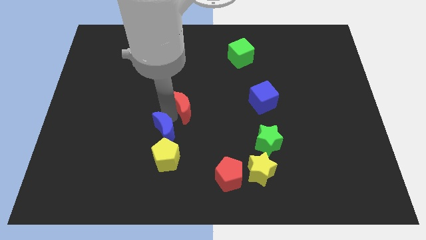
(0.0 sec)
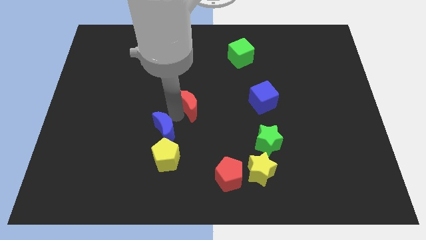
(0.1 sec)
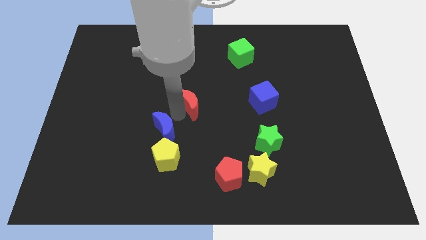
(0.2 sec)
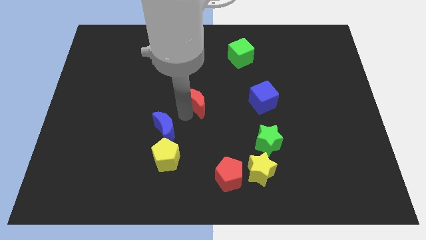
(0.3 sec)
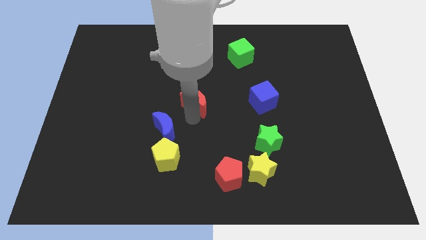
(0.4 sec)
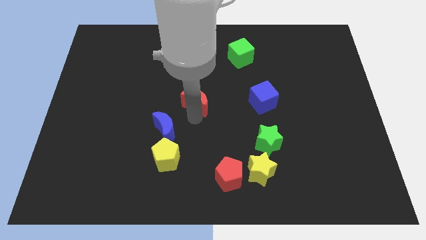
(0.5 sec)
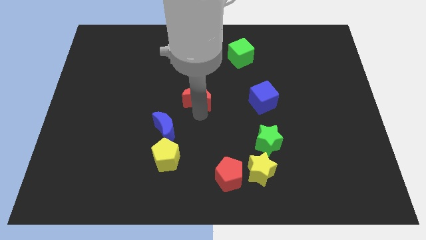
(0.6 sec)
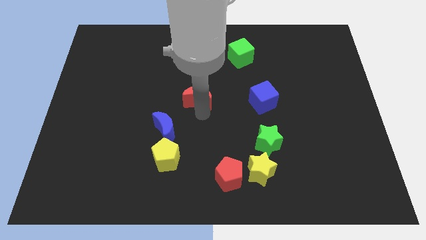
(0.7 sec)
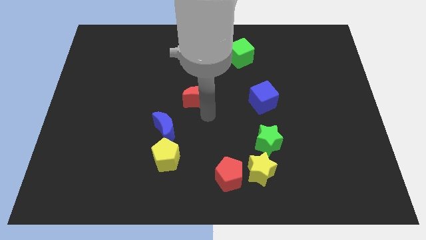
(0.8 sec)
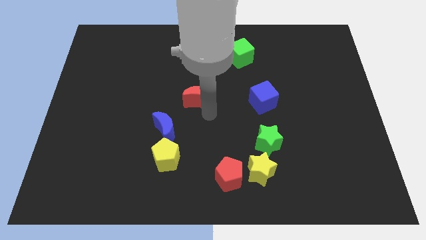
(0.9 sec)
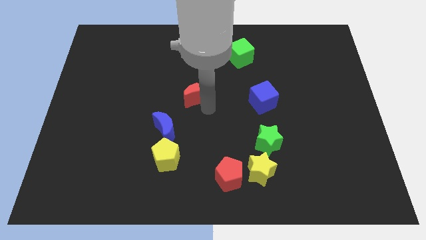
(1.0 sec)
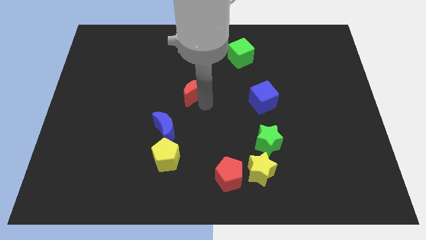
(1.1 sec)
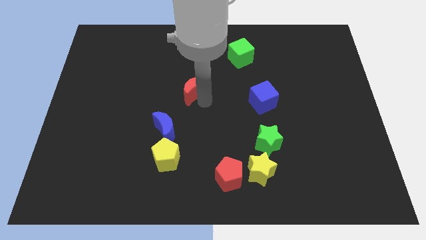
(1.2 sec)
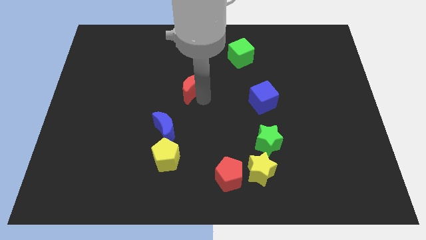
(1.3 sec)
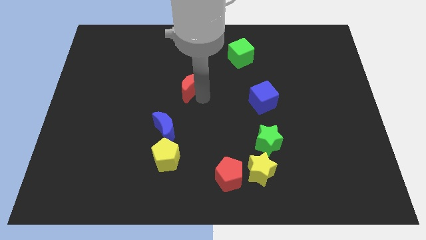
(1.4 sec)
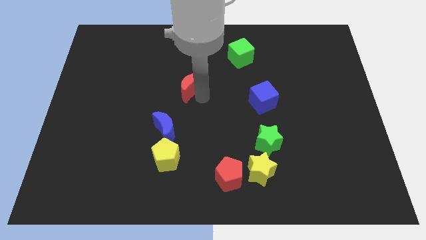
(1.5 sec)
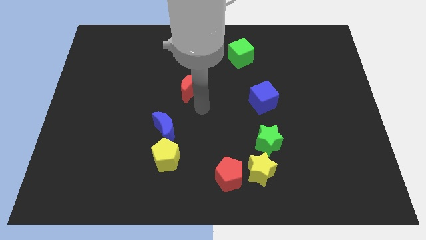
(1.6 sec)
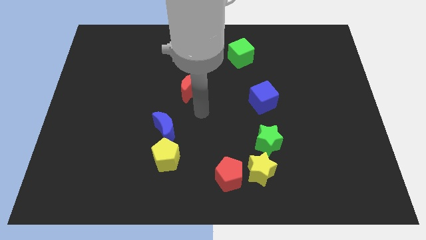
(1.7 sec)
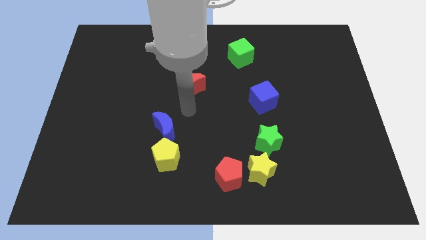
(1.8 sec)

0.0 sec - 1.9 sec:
move the red crescent diagonal to green cube

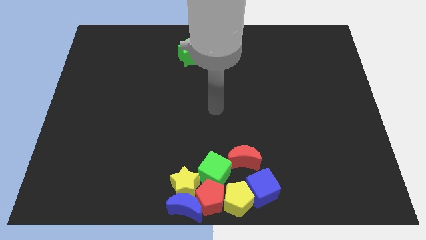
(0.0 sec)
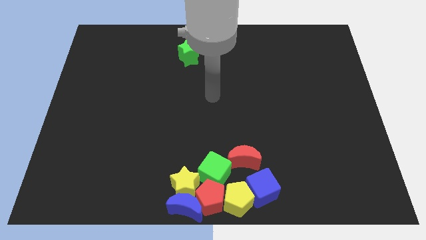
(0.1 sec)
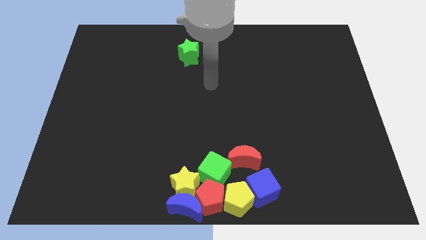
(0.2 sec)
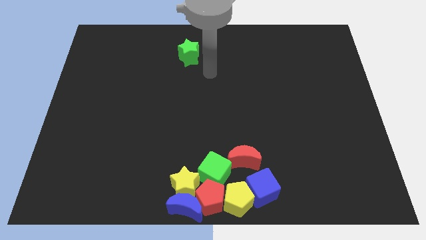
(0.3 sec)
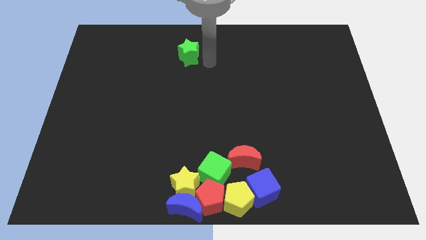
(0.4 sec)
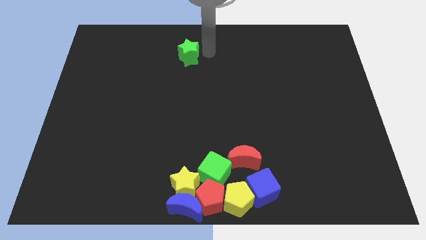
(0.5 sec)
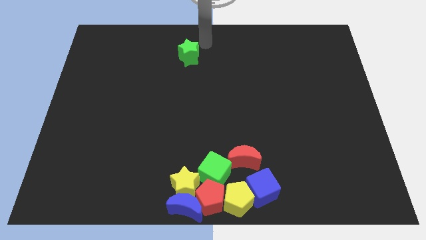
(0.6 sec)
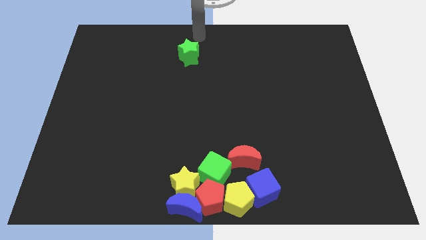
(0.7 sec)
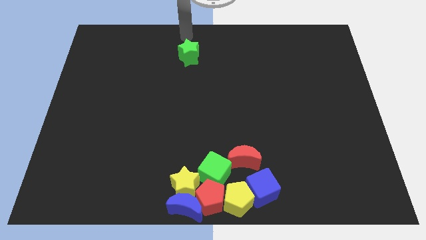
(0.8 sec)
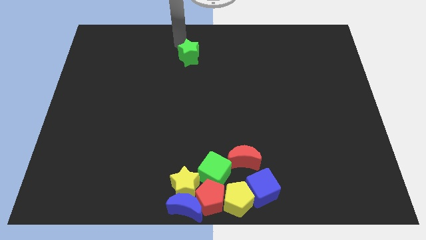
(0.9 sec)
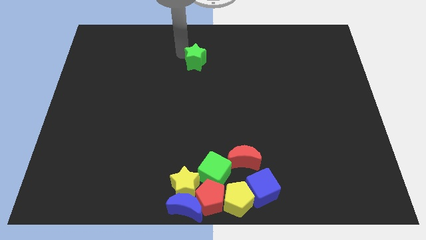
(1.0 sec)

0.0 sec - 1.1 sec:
move your arm towards the top left side of the green star

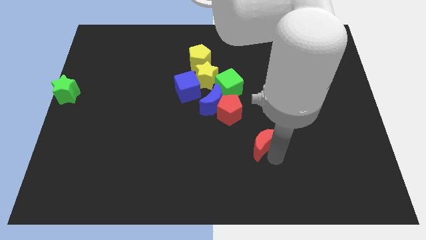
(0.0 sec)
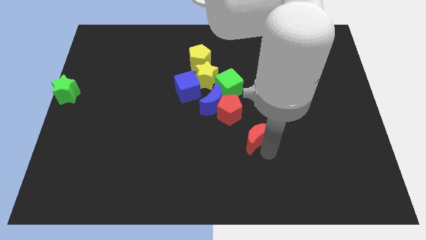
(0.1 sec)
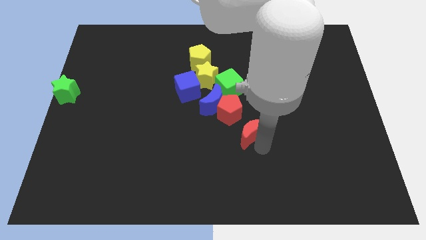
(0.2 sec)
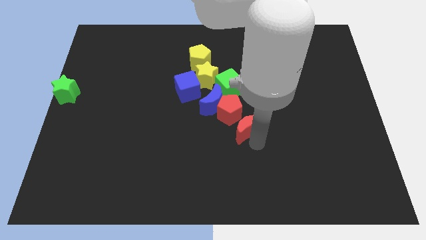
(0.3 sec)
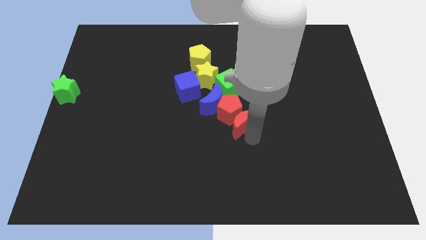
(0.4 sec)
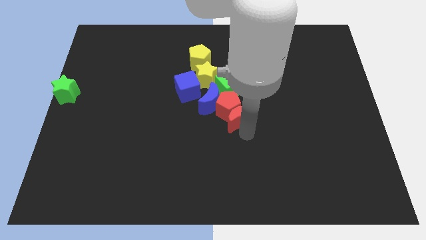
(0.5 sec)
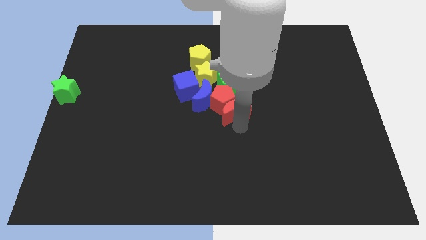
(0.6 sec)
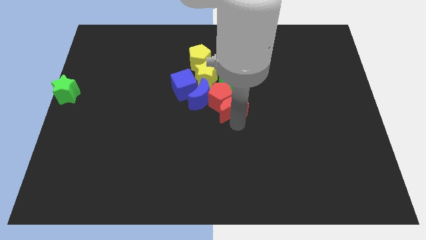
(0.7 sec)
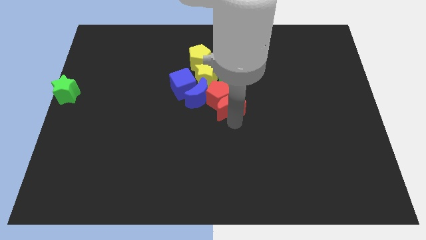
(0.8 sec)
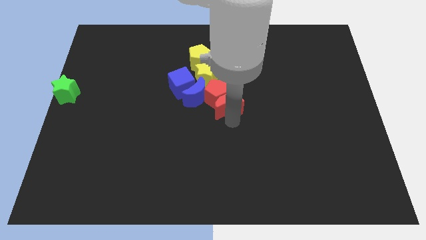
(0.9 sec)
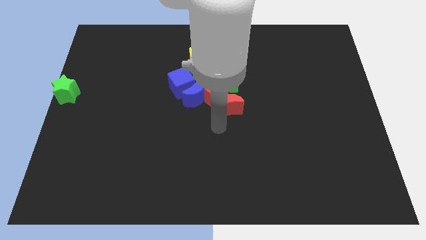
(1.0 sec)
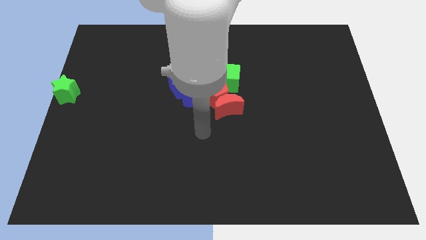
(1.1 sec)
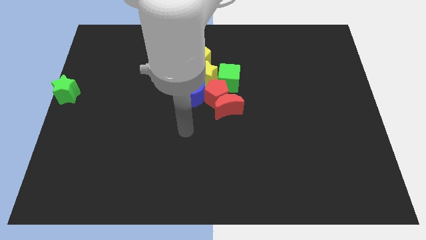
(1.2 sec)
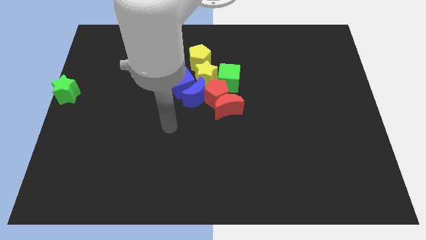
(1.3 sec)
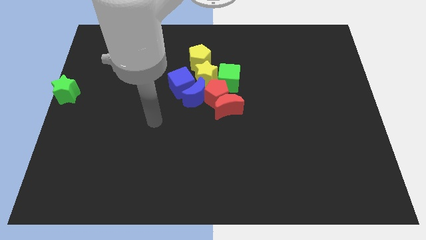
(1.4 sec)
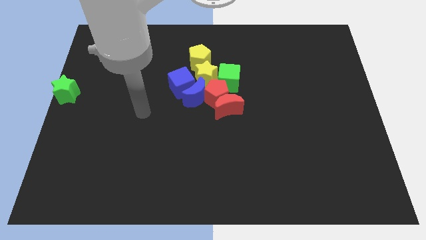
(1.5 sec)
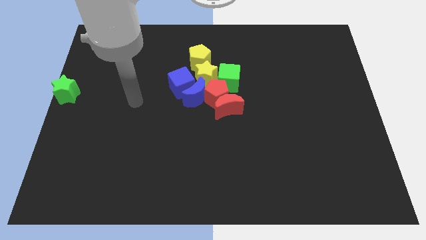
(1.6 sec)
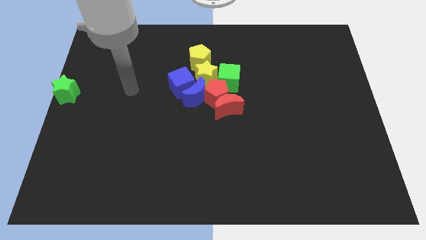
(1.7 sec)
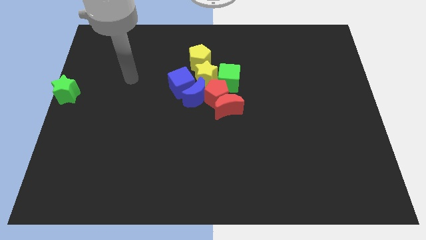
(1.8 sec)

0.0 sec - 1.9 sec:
move the red crescent into the red pentagon

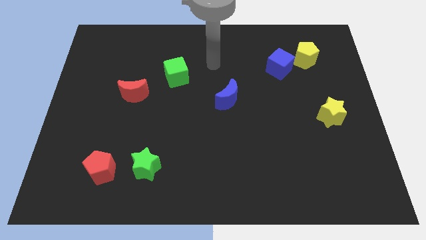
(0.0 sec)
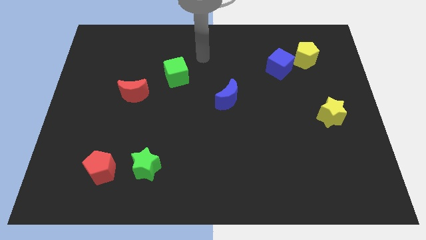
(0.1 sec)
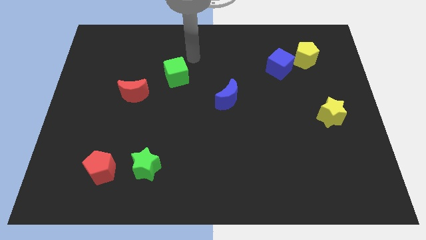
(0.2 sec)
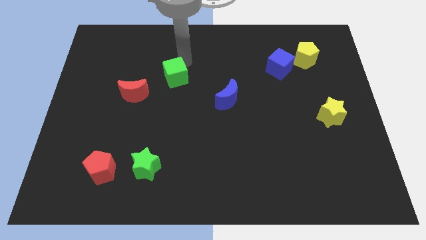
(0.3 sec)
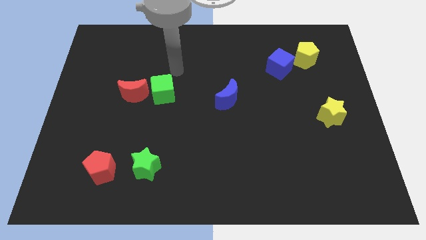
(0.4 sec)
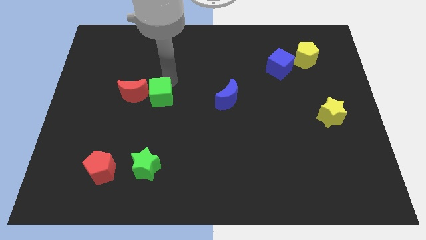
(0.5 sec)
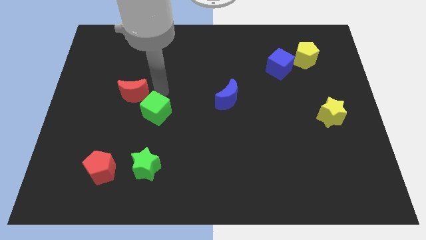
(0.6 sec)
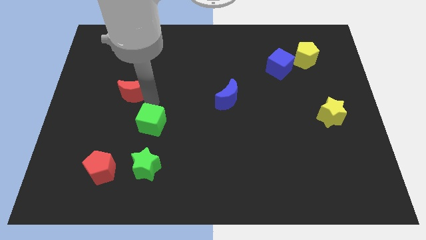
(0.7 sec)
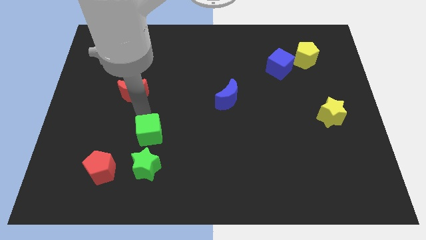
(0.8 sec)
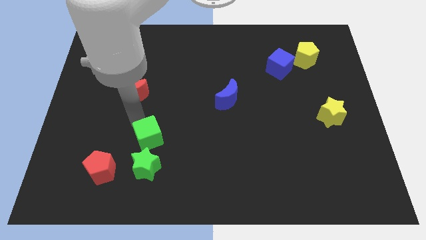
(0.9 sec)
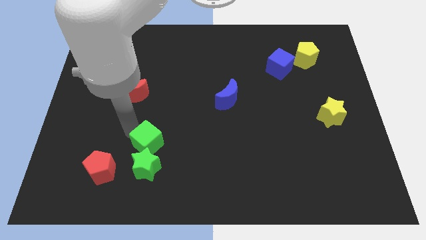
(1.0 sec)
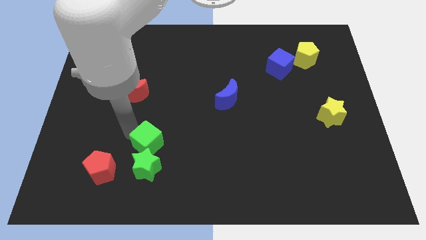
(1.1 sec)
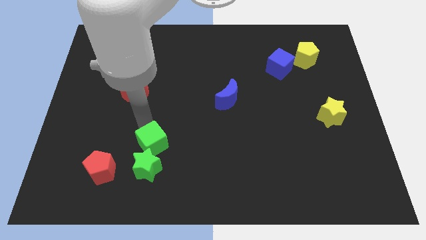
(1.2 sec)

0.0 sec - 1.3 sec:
push the green cube into green star

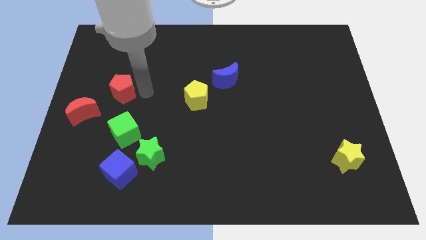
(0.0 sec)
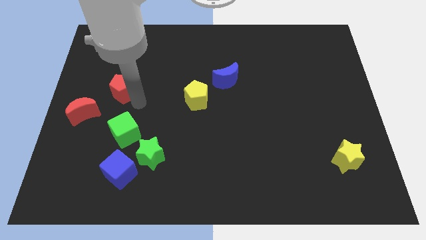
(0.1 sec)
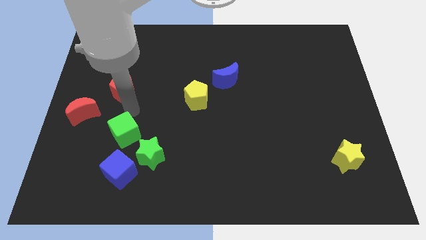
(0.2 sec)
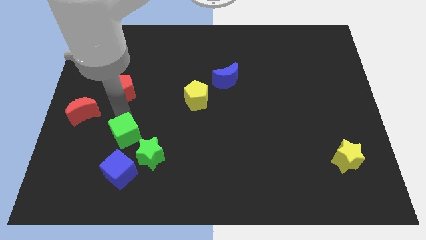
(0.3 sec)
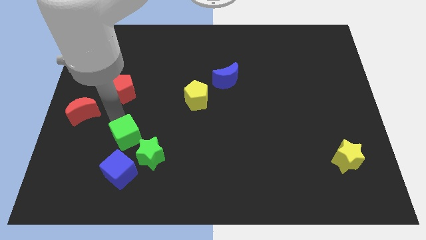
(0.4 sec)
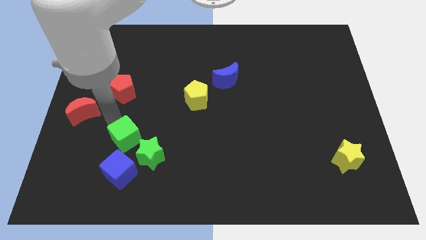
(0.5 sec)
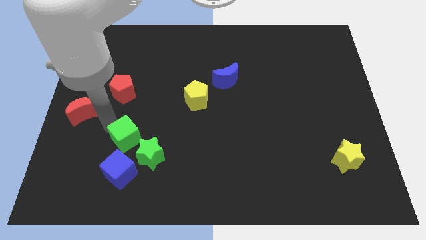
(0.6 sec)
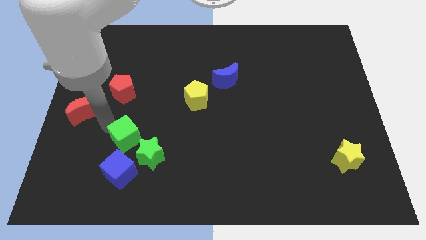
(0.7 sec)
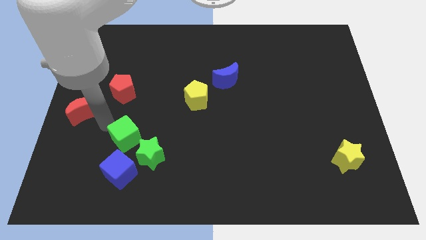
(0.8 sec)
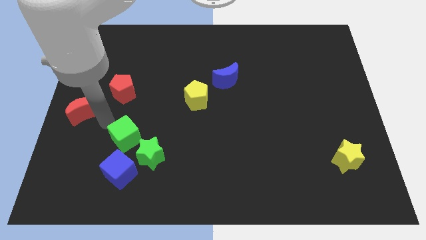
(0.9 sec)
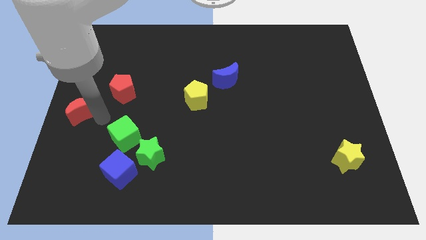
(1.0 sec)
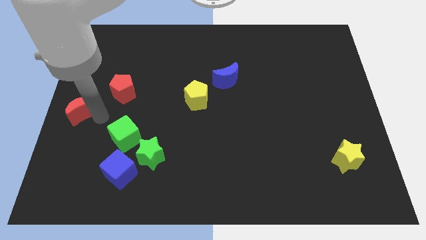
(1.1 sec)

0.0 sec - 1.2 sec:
slightly push the green cube towards the green star

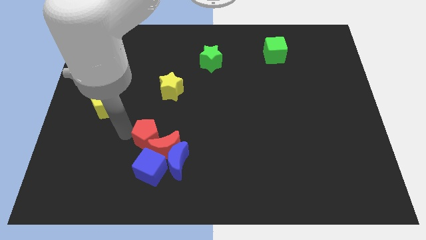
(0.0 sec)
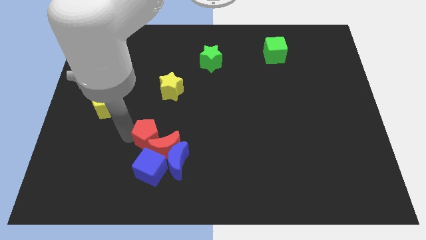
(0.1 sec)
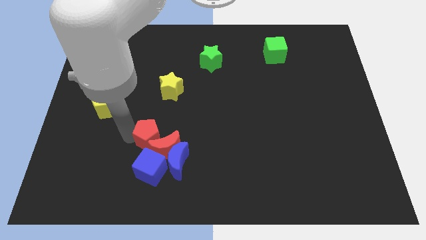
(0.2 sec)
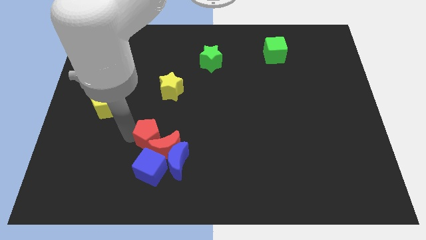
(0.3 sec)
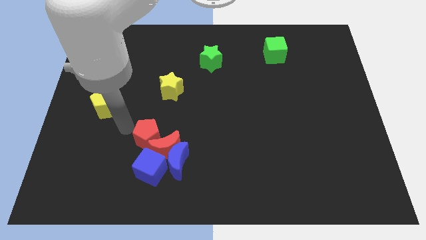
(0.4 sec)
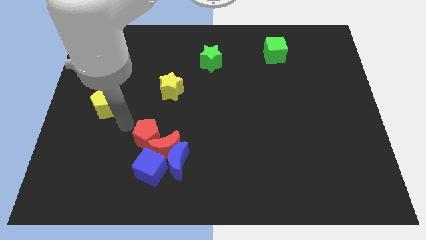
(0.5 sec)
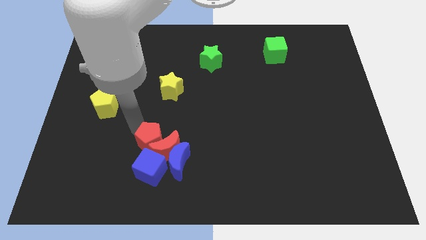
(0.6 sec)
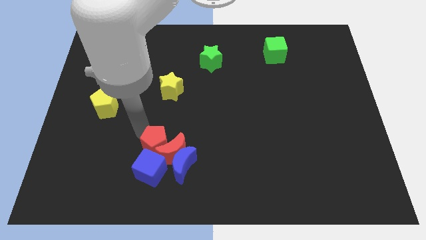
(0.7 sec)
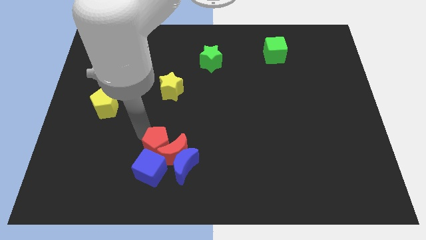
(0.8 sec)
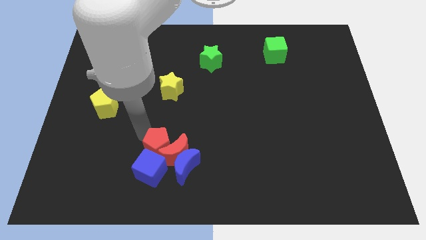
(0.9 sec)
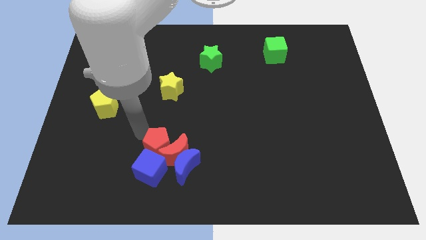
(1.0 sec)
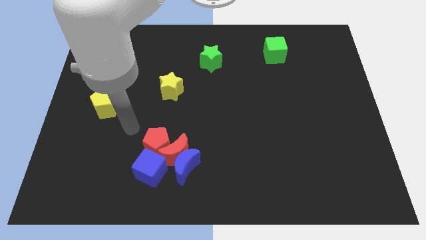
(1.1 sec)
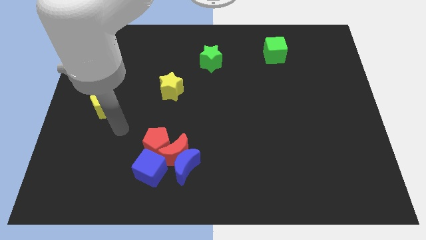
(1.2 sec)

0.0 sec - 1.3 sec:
push the red blocks into blue blocks

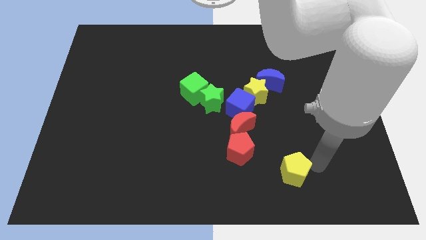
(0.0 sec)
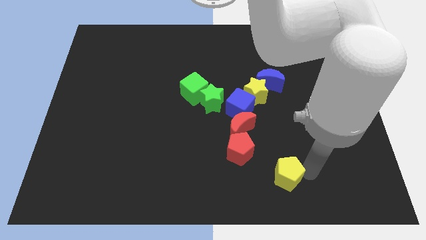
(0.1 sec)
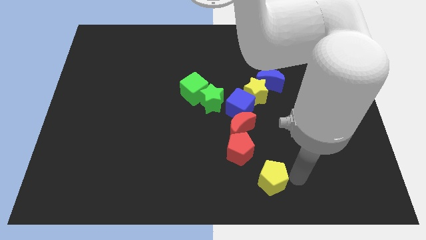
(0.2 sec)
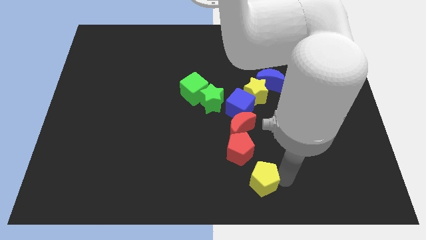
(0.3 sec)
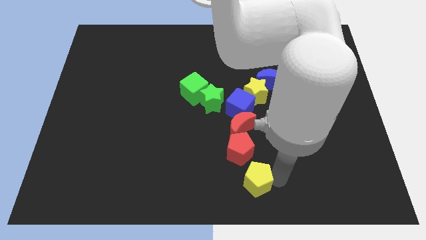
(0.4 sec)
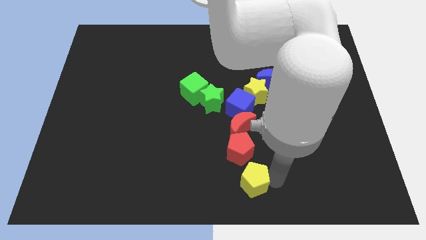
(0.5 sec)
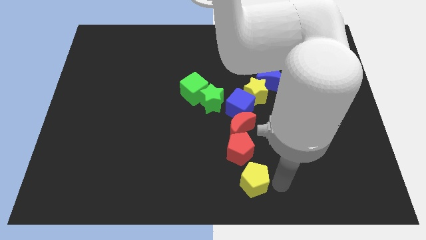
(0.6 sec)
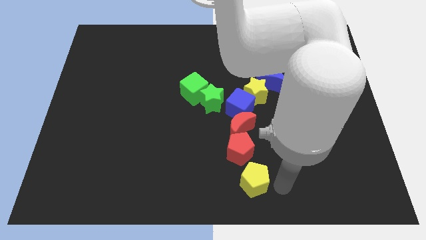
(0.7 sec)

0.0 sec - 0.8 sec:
move the yellow pentagon to the right bottom of the red pentagon
